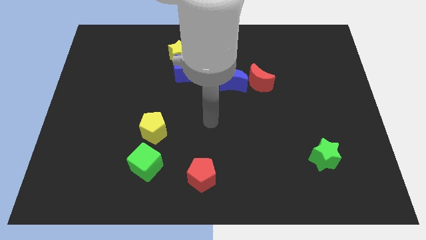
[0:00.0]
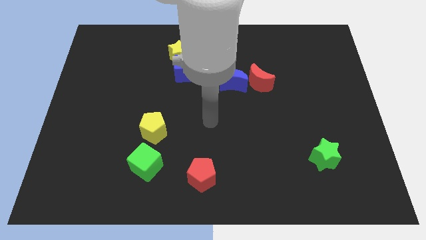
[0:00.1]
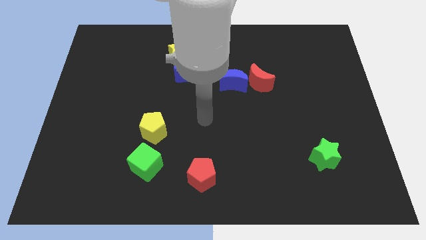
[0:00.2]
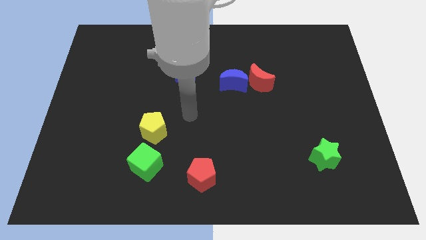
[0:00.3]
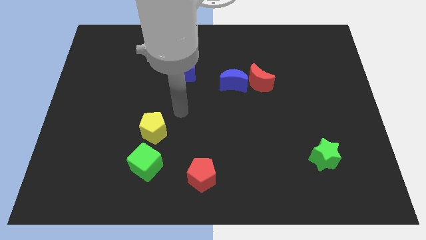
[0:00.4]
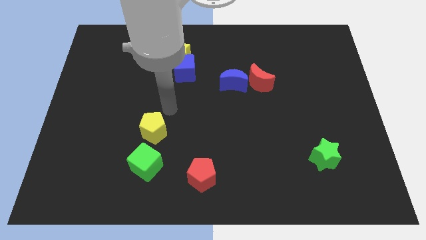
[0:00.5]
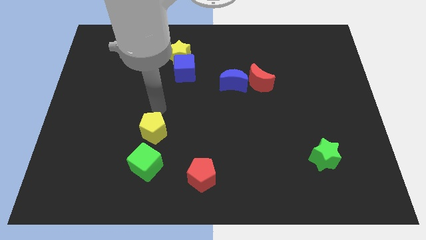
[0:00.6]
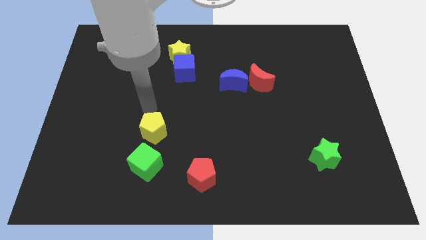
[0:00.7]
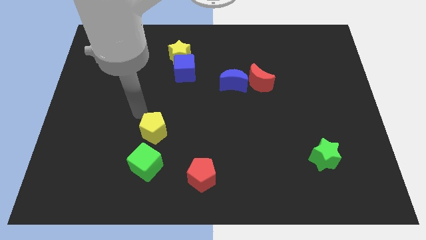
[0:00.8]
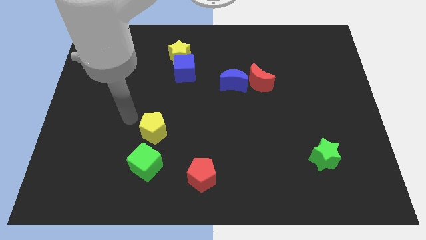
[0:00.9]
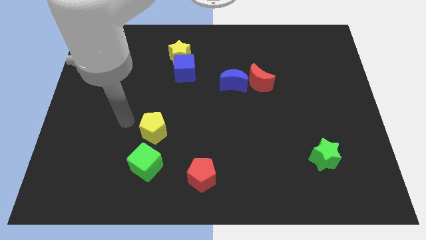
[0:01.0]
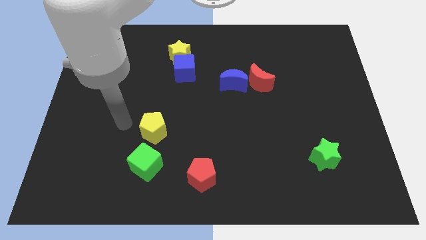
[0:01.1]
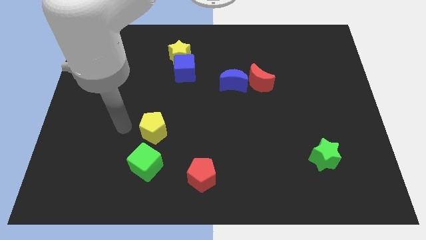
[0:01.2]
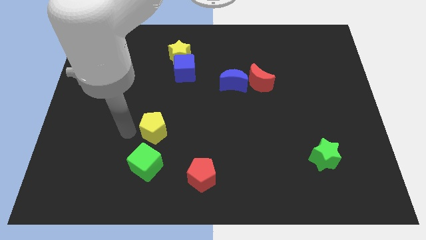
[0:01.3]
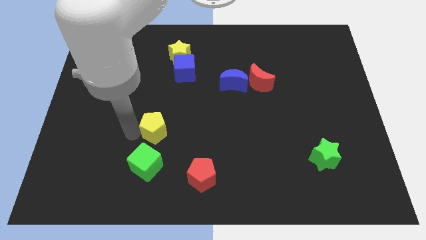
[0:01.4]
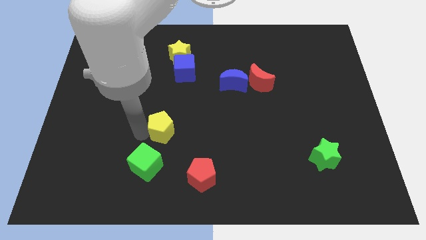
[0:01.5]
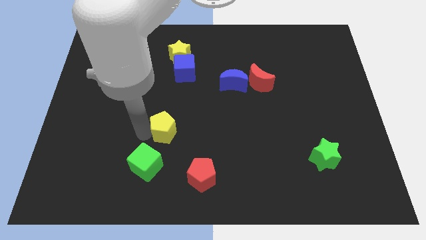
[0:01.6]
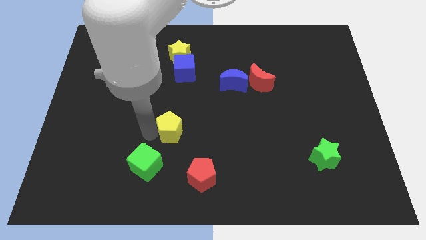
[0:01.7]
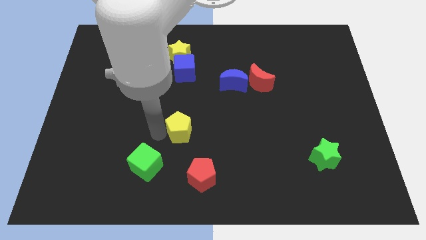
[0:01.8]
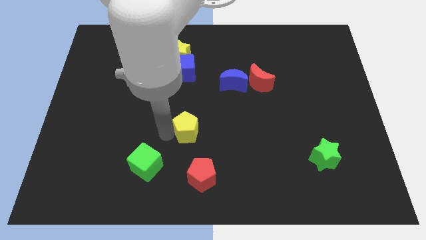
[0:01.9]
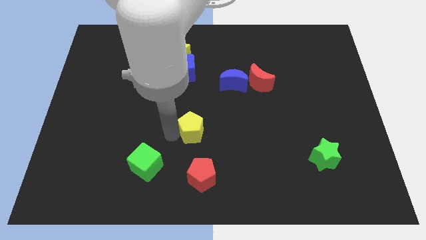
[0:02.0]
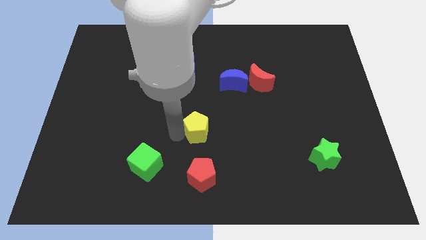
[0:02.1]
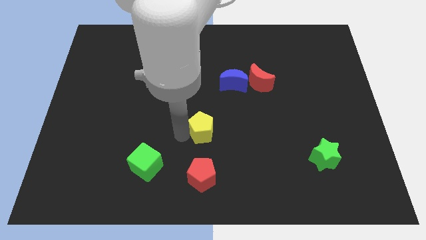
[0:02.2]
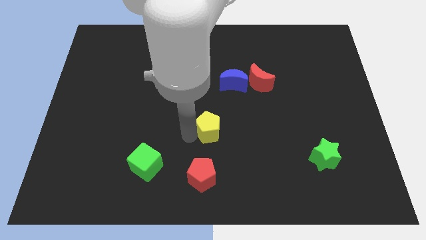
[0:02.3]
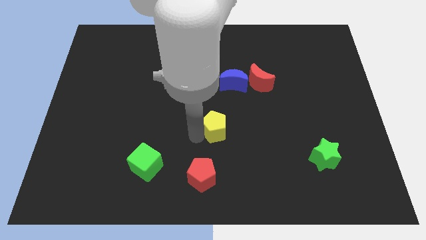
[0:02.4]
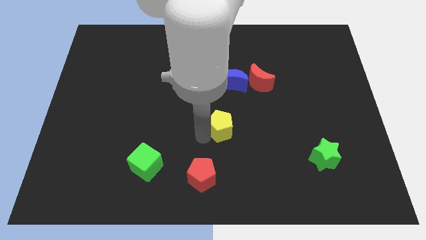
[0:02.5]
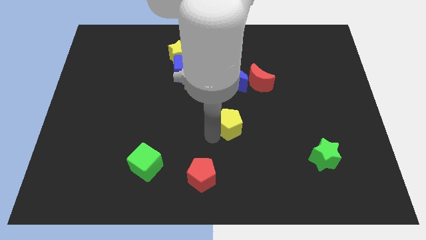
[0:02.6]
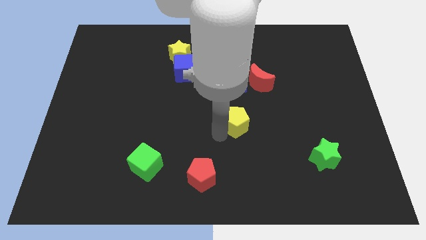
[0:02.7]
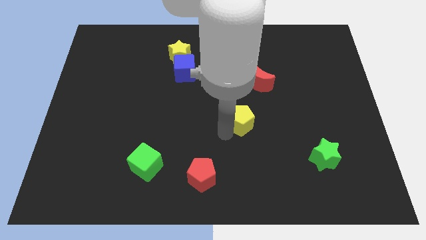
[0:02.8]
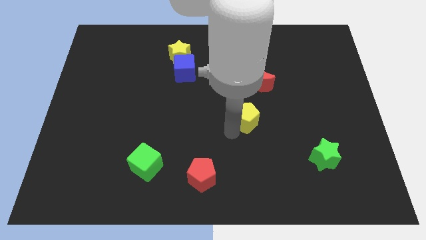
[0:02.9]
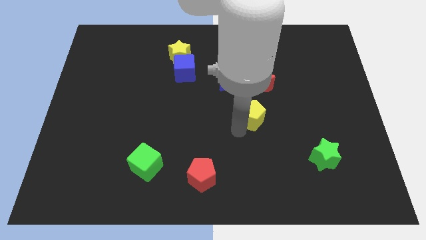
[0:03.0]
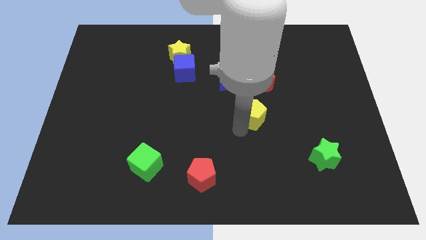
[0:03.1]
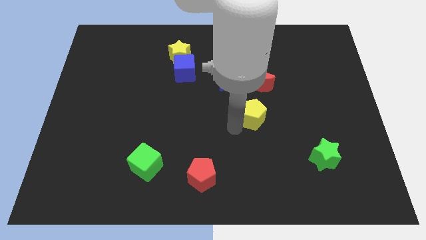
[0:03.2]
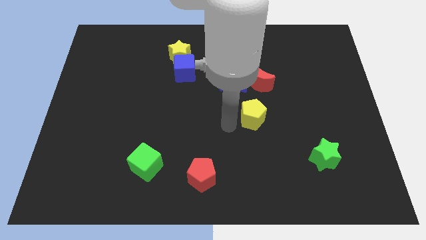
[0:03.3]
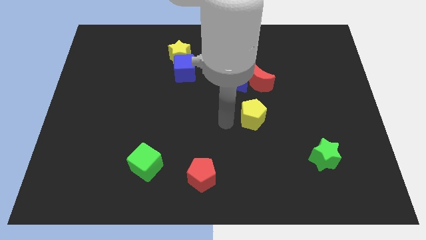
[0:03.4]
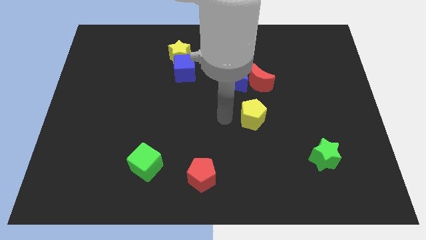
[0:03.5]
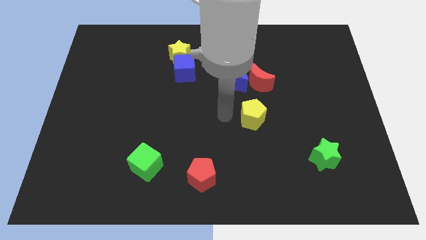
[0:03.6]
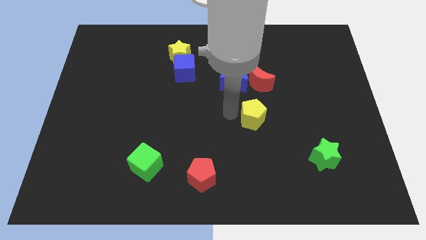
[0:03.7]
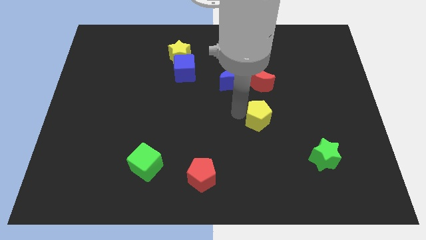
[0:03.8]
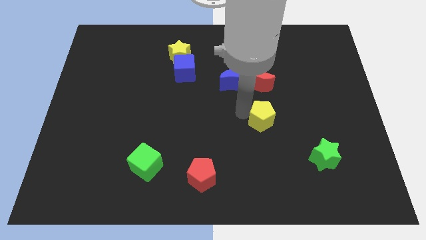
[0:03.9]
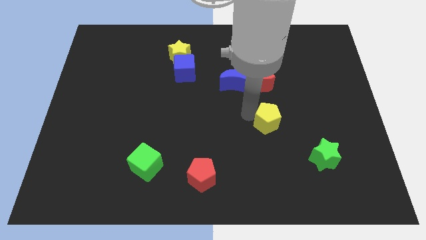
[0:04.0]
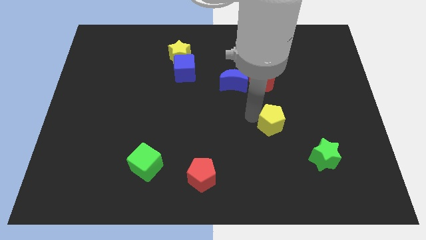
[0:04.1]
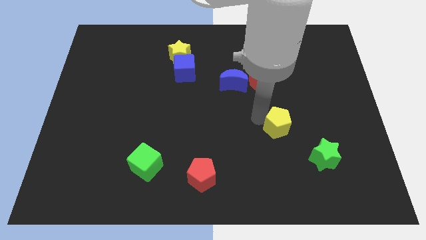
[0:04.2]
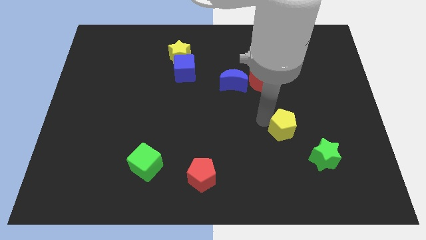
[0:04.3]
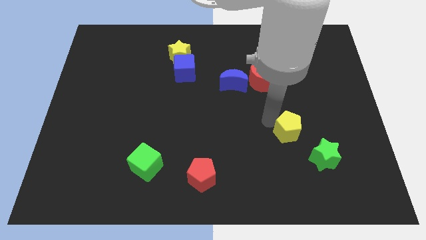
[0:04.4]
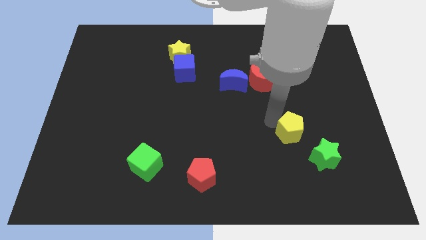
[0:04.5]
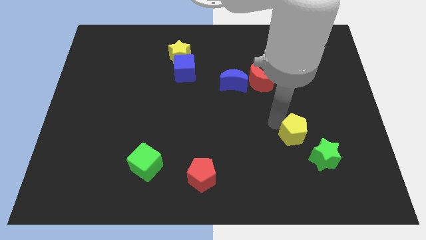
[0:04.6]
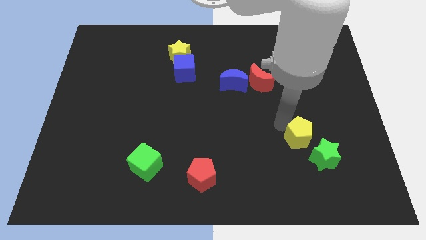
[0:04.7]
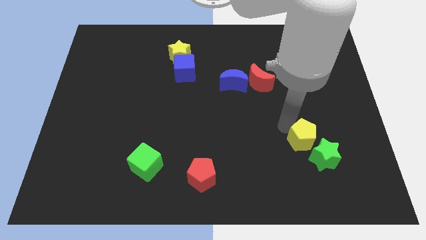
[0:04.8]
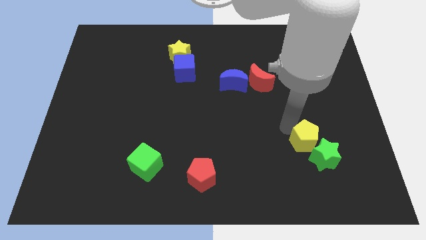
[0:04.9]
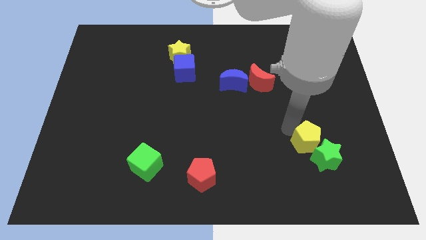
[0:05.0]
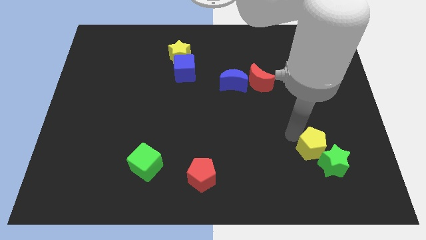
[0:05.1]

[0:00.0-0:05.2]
move the yellow pentagon towards the green star

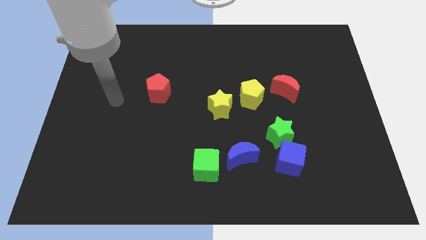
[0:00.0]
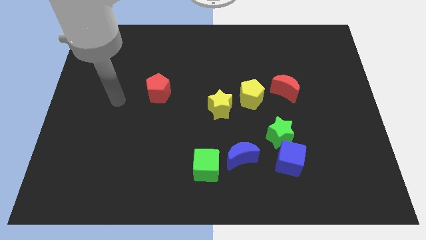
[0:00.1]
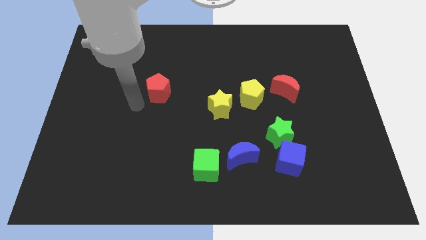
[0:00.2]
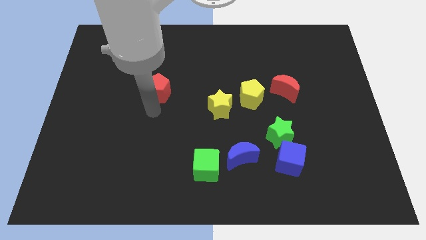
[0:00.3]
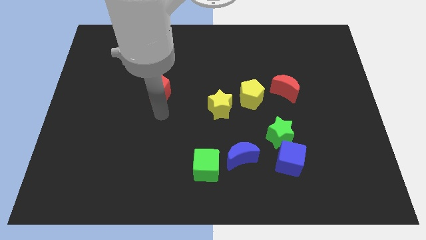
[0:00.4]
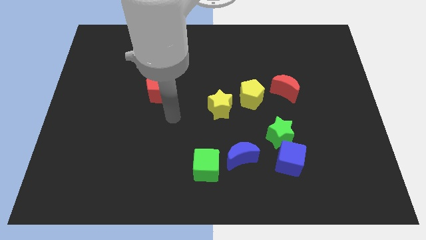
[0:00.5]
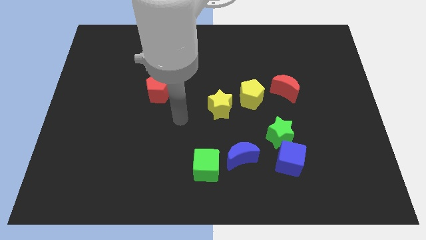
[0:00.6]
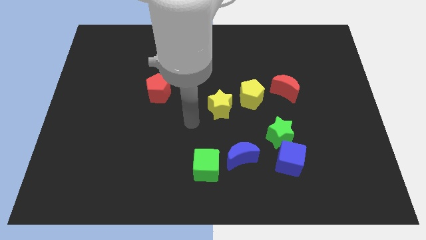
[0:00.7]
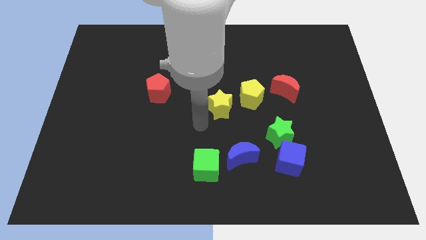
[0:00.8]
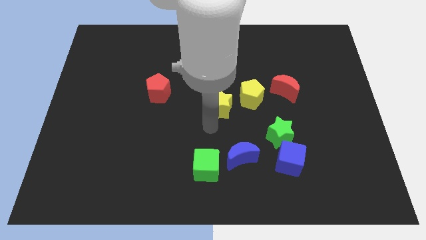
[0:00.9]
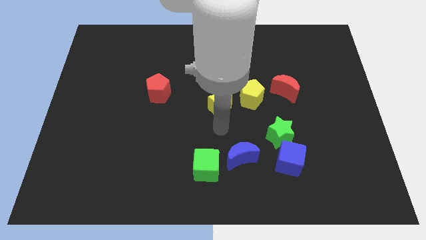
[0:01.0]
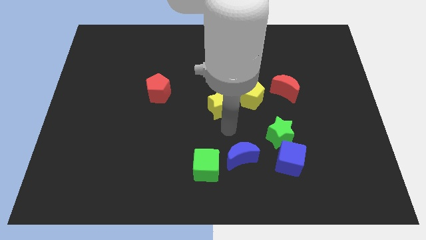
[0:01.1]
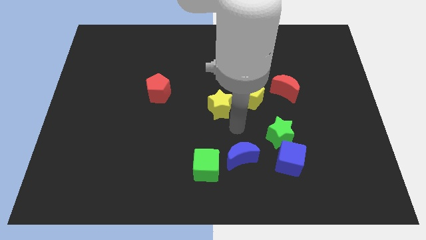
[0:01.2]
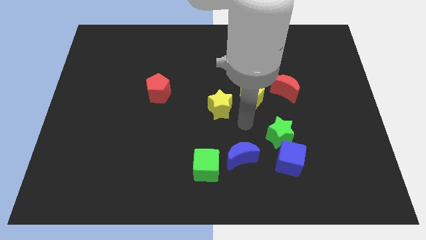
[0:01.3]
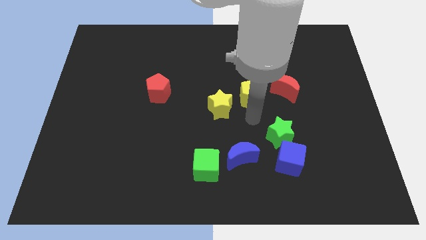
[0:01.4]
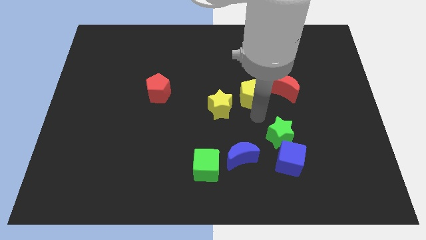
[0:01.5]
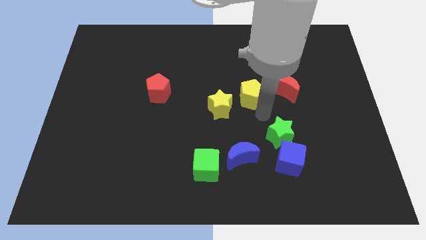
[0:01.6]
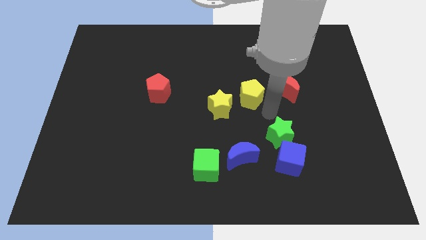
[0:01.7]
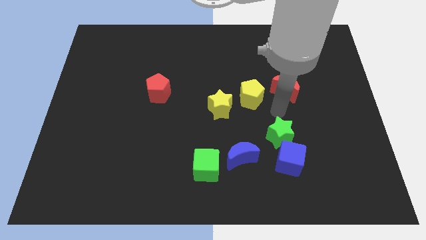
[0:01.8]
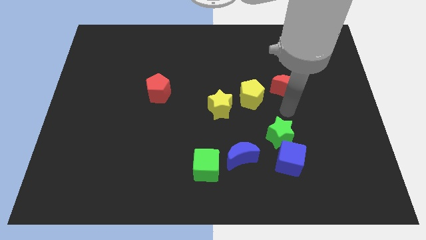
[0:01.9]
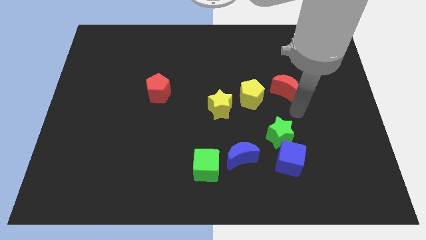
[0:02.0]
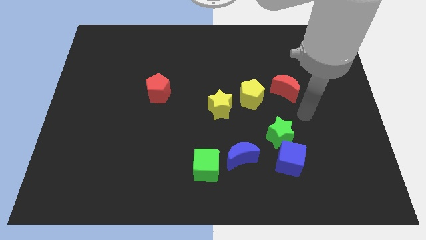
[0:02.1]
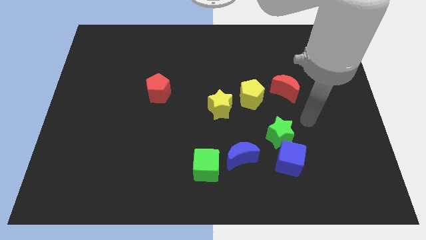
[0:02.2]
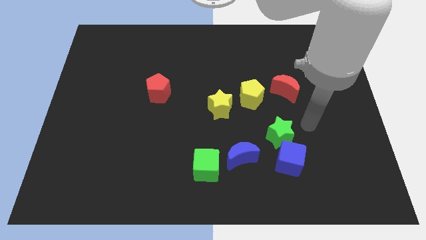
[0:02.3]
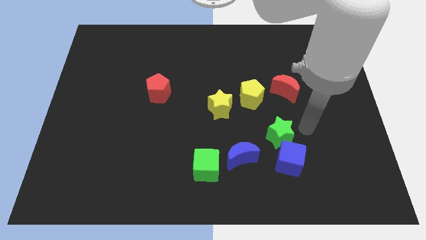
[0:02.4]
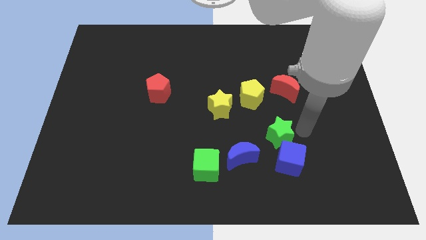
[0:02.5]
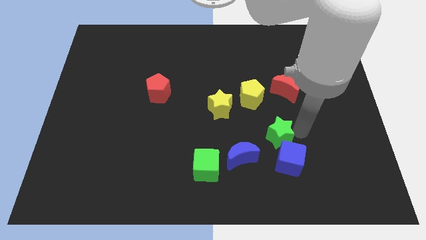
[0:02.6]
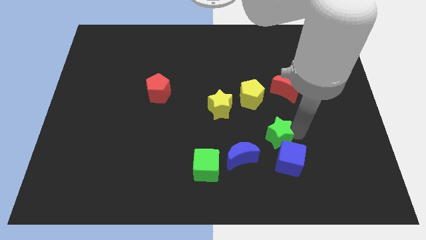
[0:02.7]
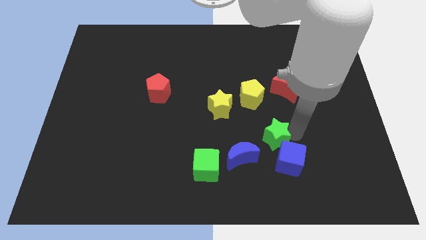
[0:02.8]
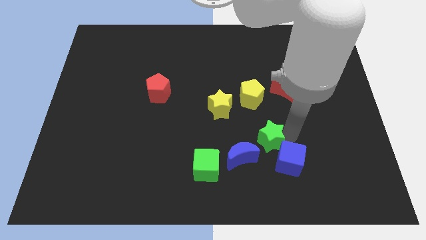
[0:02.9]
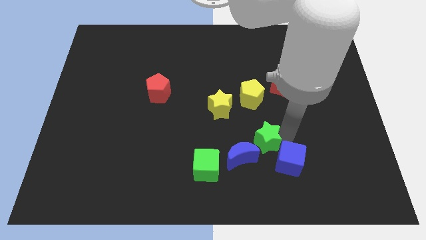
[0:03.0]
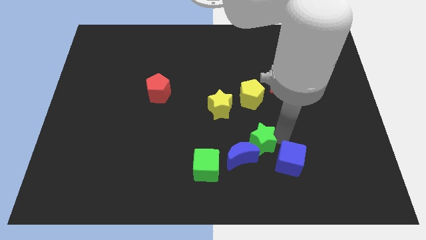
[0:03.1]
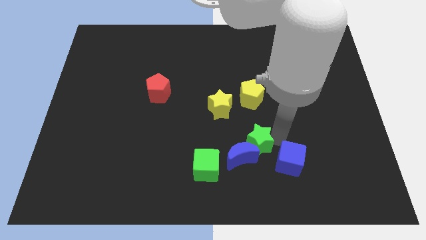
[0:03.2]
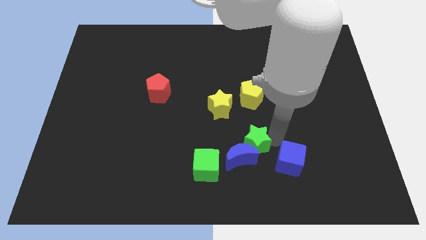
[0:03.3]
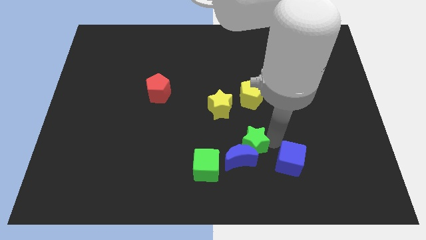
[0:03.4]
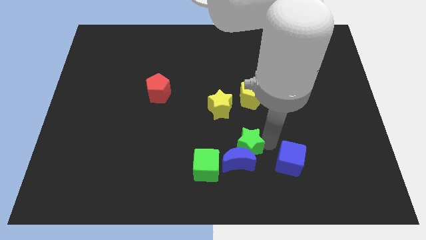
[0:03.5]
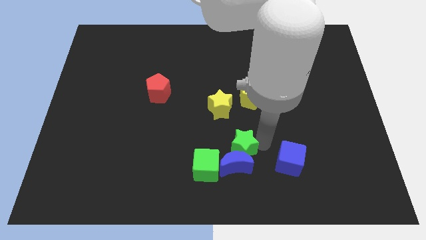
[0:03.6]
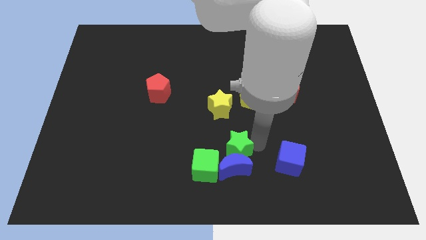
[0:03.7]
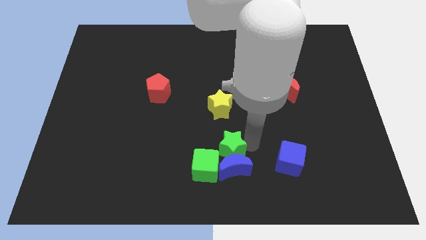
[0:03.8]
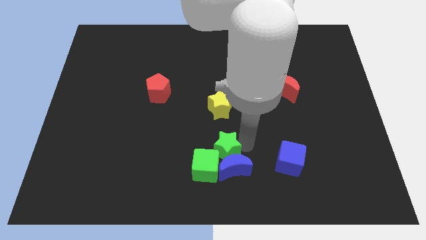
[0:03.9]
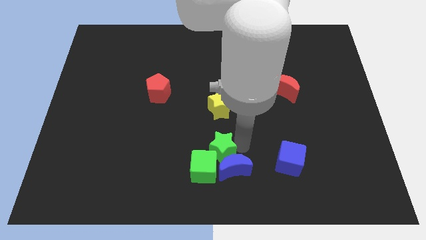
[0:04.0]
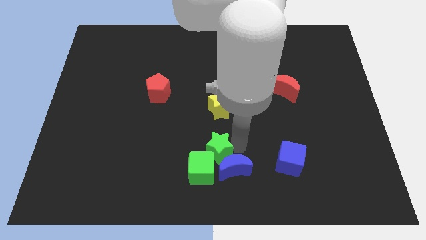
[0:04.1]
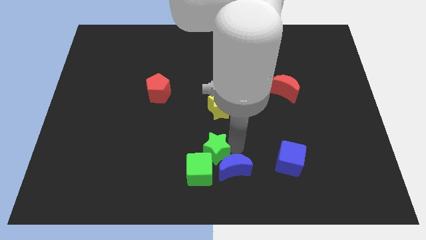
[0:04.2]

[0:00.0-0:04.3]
put the green star next to the green cube
